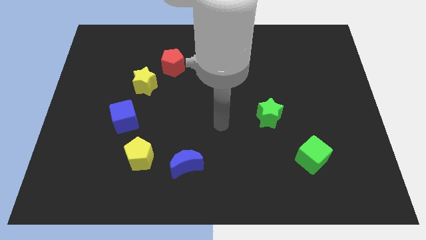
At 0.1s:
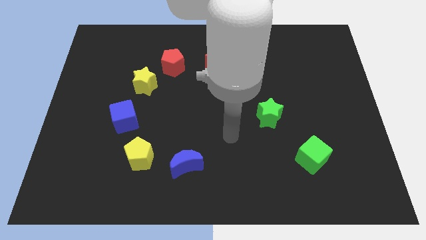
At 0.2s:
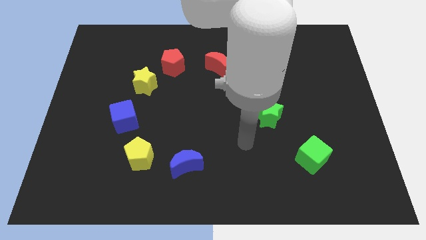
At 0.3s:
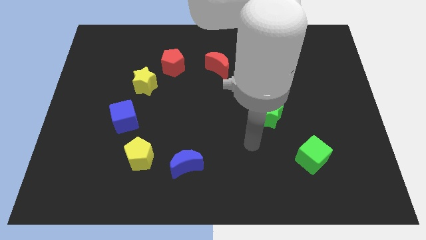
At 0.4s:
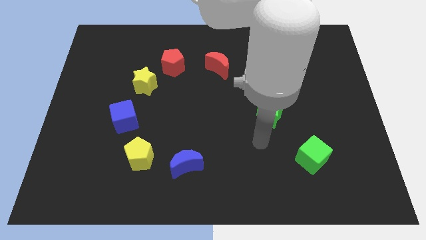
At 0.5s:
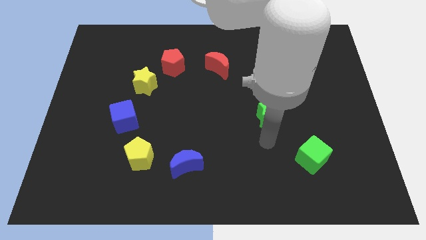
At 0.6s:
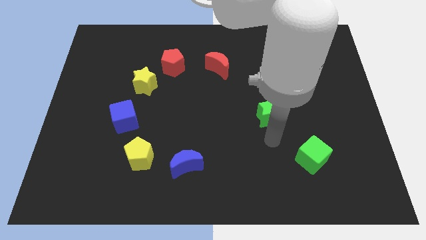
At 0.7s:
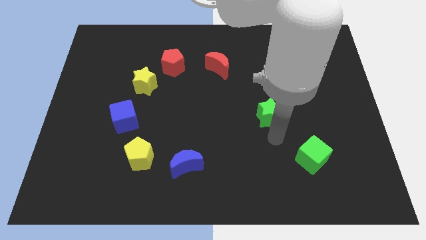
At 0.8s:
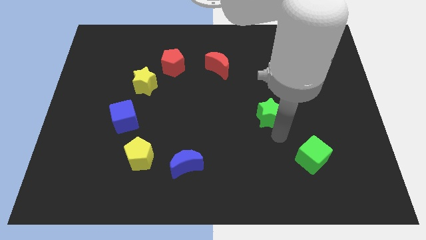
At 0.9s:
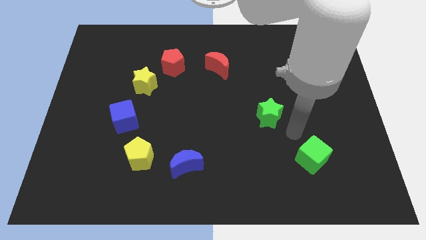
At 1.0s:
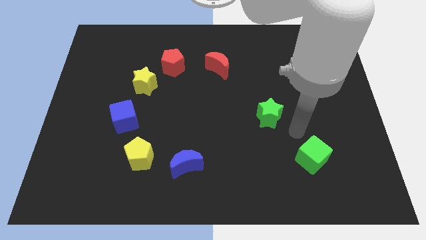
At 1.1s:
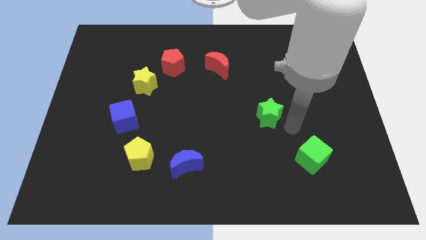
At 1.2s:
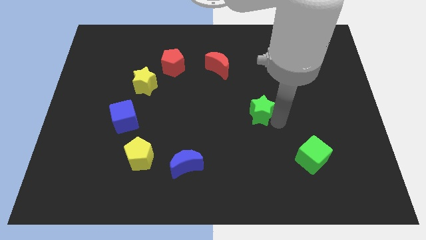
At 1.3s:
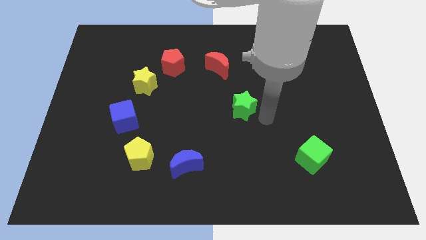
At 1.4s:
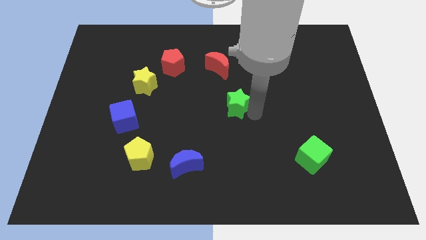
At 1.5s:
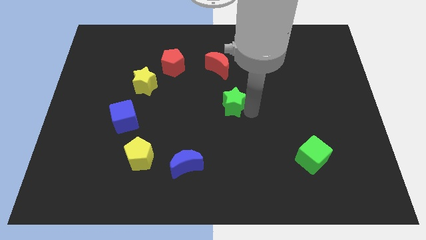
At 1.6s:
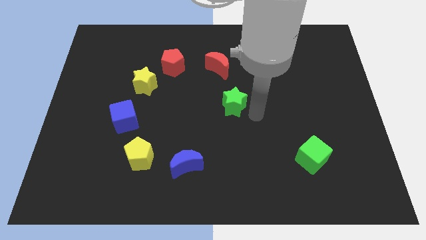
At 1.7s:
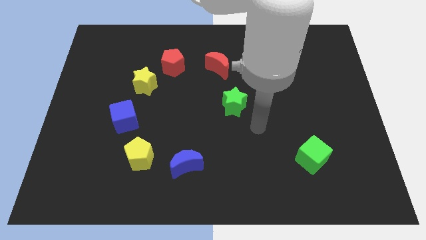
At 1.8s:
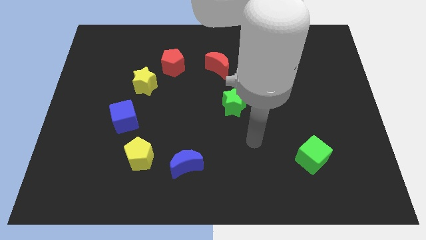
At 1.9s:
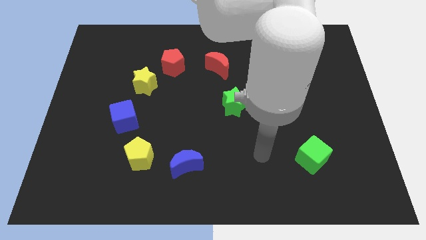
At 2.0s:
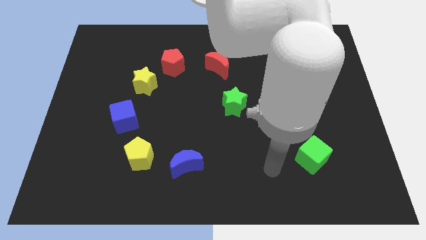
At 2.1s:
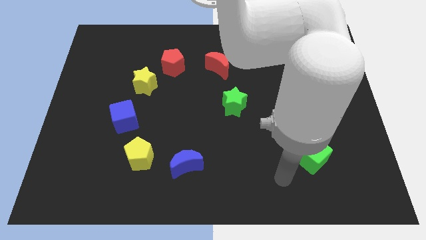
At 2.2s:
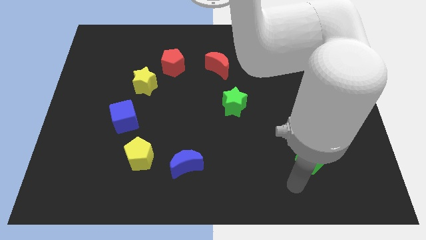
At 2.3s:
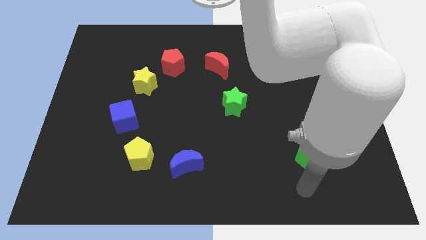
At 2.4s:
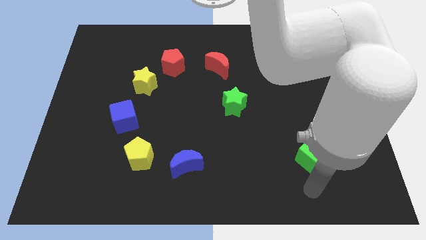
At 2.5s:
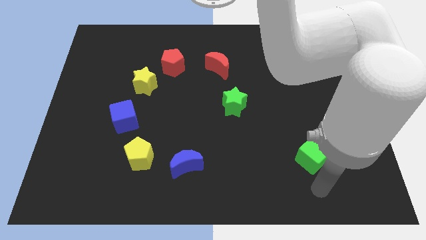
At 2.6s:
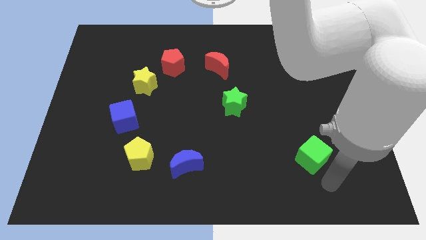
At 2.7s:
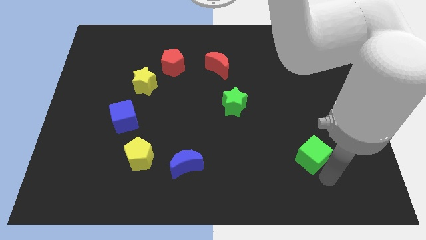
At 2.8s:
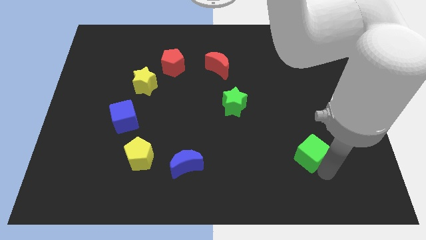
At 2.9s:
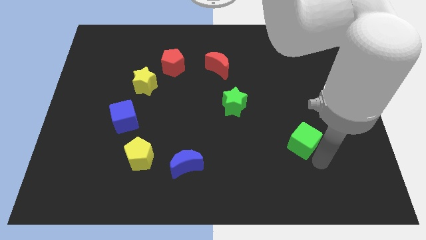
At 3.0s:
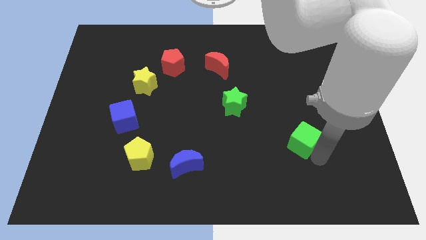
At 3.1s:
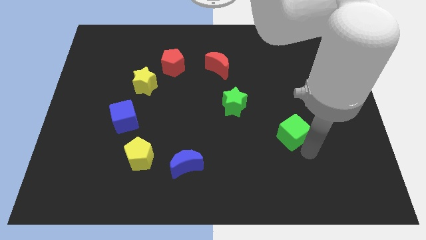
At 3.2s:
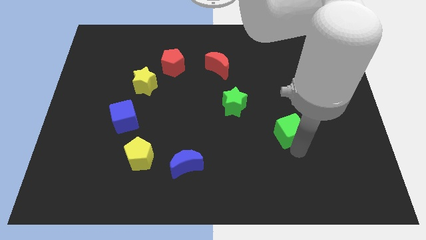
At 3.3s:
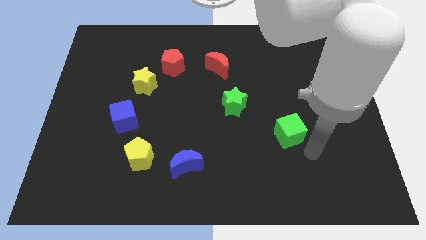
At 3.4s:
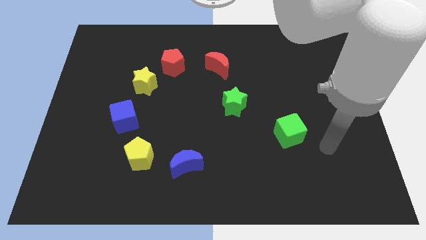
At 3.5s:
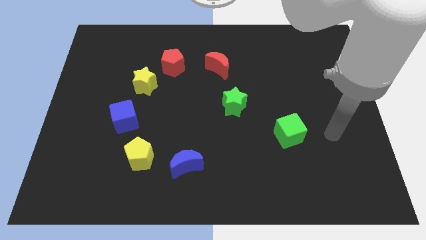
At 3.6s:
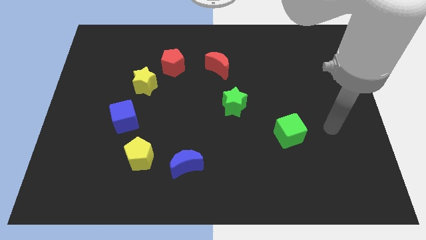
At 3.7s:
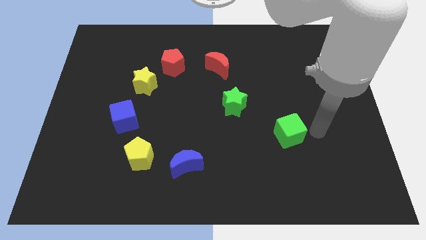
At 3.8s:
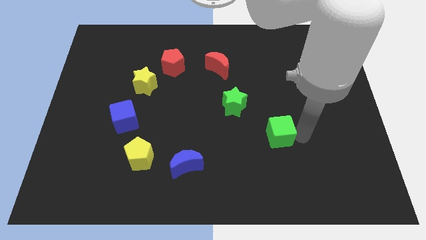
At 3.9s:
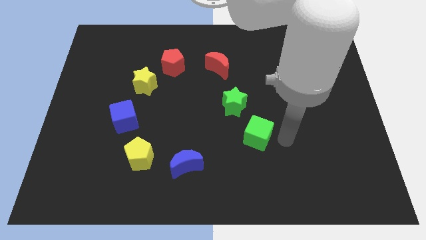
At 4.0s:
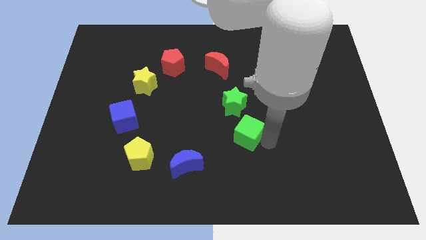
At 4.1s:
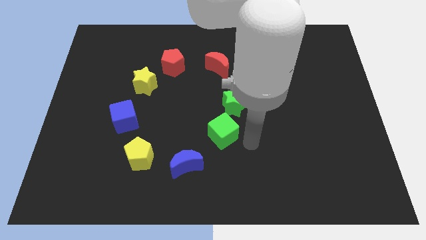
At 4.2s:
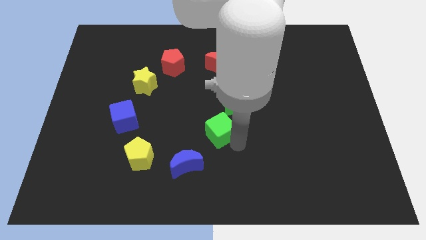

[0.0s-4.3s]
move the green star and green cube towards the center of the board

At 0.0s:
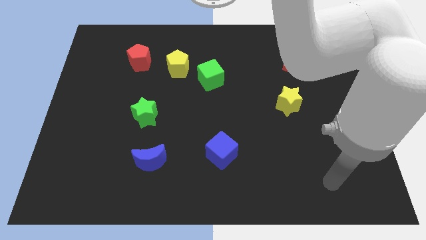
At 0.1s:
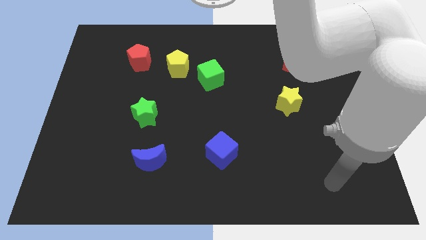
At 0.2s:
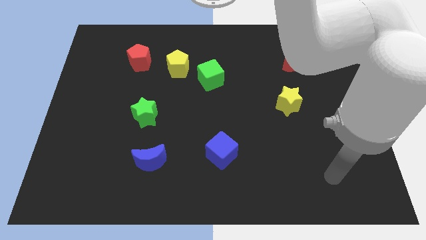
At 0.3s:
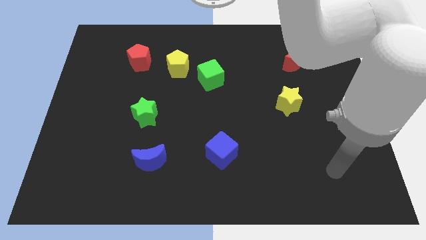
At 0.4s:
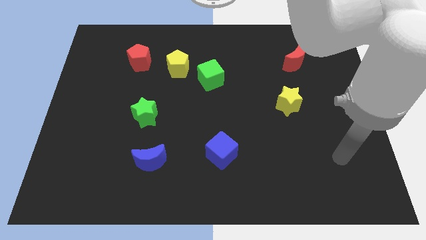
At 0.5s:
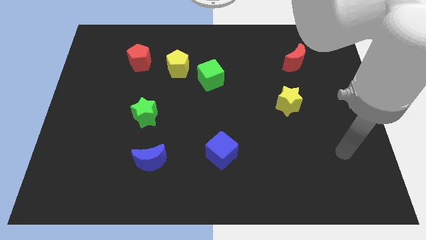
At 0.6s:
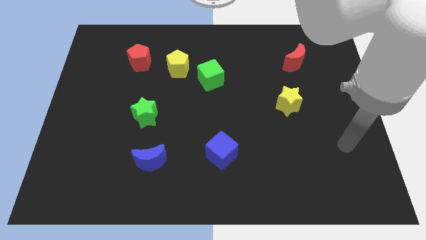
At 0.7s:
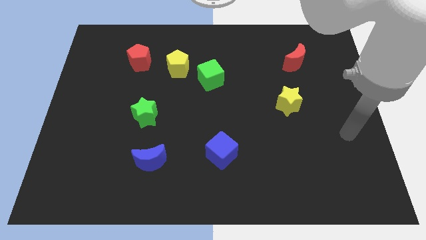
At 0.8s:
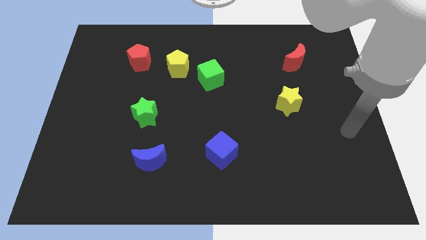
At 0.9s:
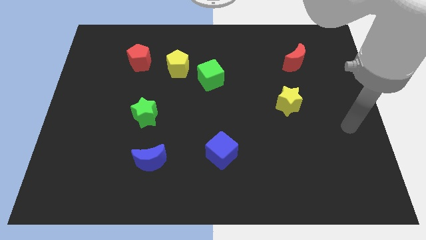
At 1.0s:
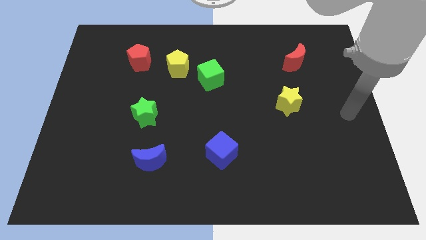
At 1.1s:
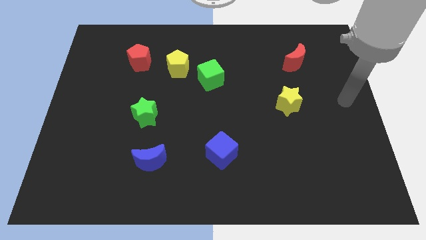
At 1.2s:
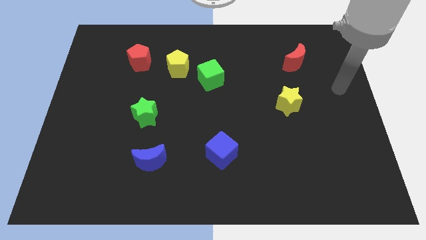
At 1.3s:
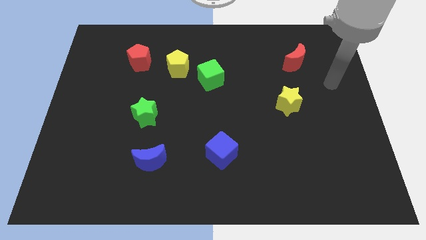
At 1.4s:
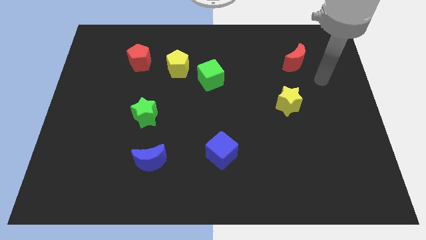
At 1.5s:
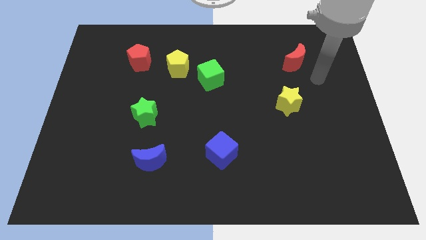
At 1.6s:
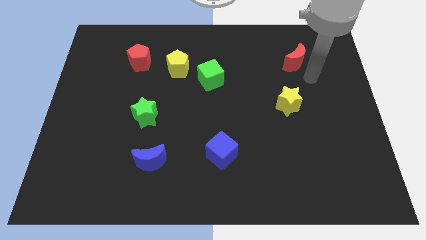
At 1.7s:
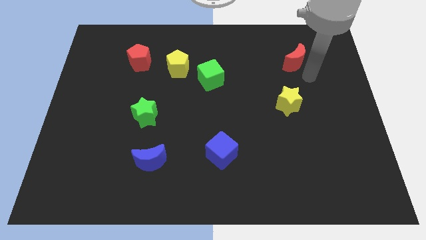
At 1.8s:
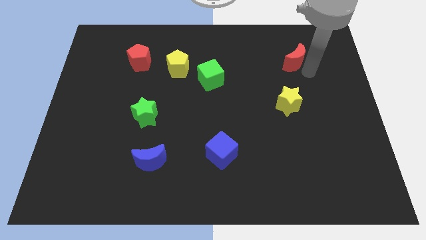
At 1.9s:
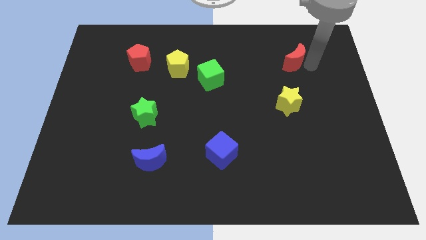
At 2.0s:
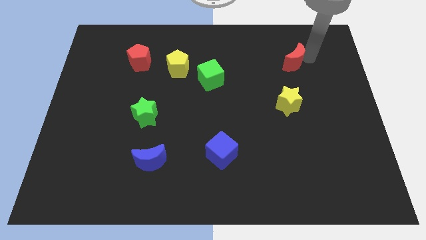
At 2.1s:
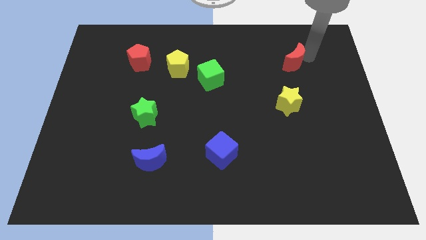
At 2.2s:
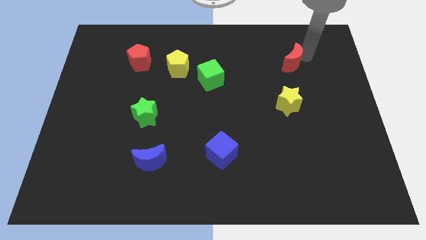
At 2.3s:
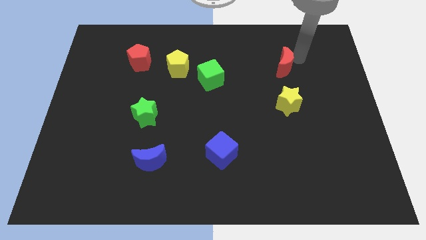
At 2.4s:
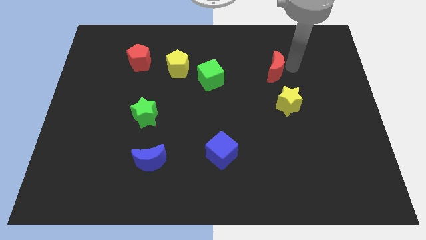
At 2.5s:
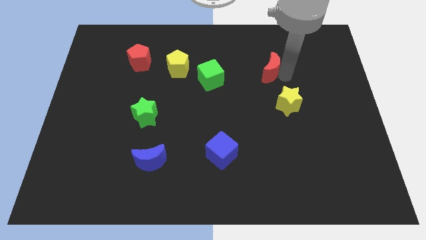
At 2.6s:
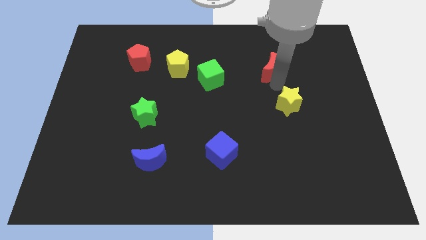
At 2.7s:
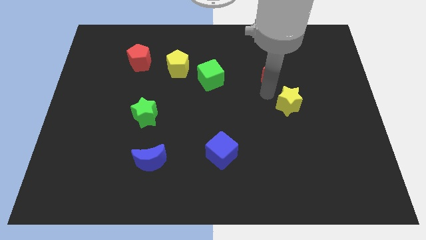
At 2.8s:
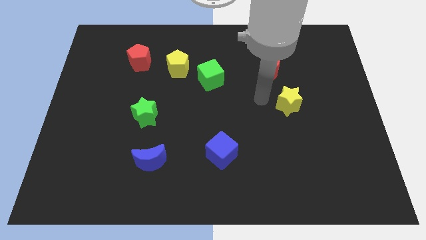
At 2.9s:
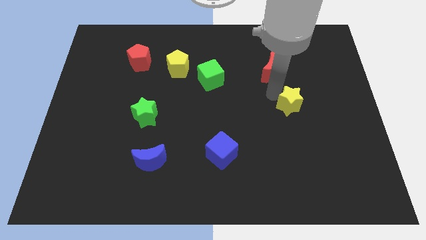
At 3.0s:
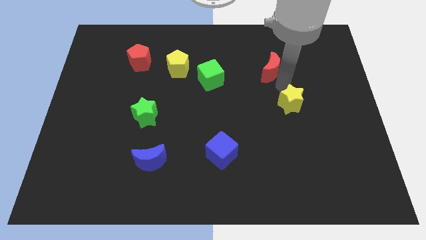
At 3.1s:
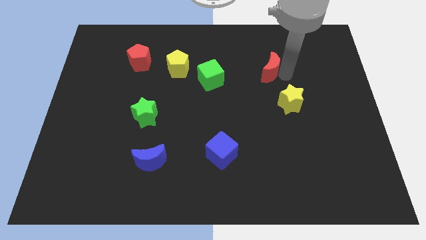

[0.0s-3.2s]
push red crescent slightly down

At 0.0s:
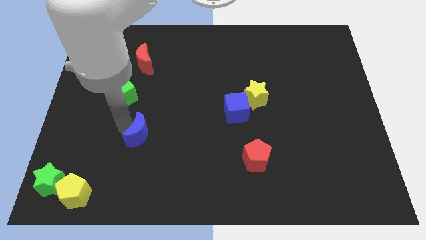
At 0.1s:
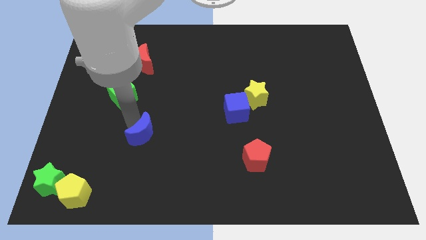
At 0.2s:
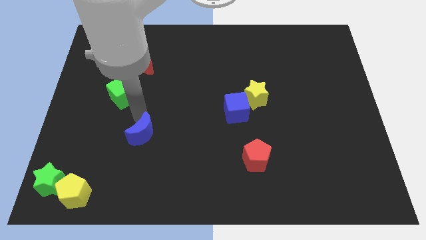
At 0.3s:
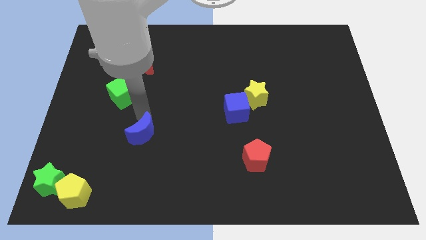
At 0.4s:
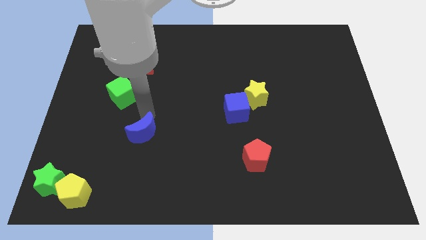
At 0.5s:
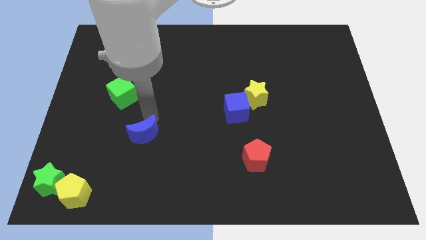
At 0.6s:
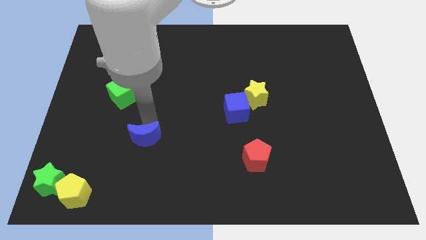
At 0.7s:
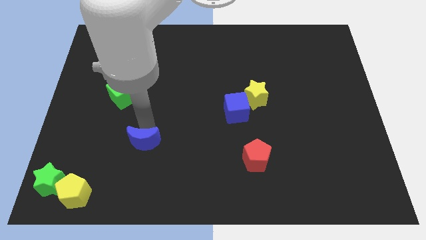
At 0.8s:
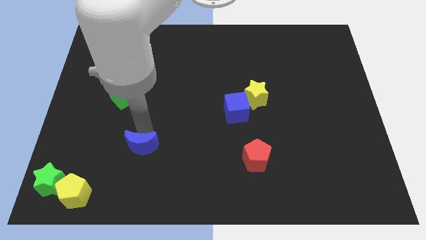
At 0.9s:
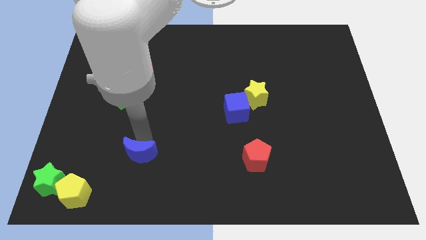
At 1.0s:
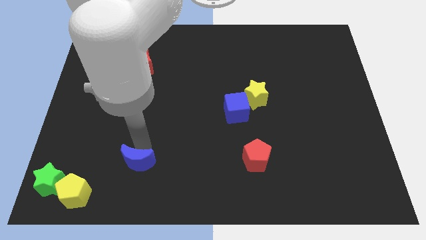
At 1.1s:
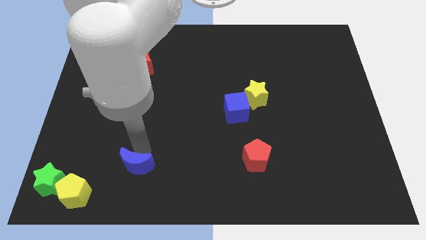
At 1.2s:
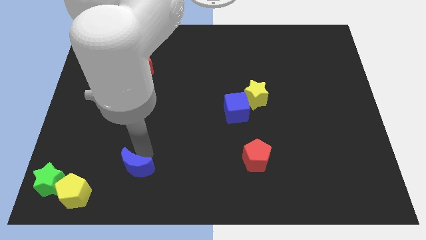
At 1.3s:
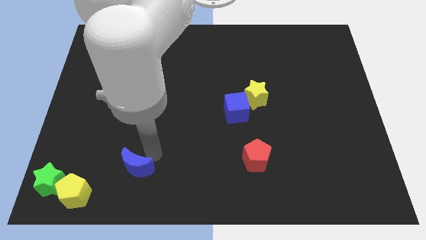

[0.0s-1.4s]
push the blue crescent slightly to the bottom
